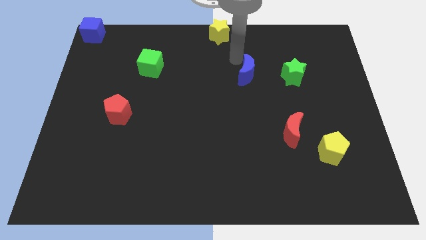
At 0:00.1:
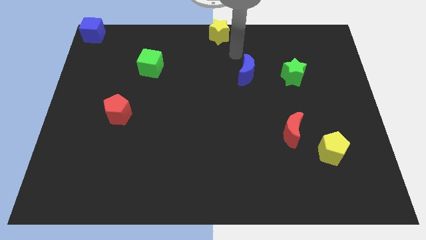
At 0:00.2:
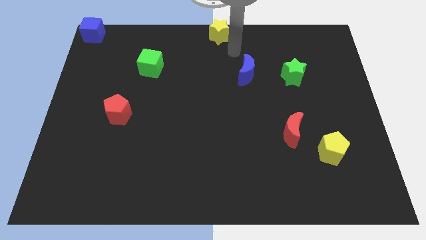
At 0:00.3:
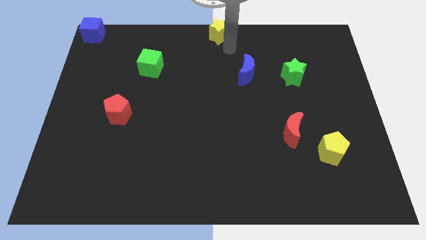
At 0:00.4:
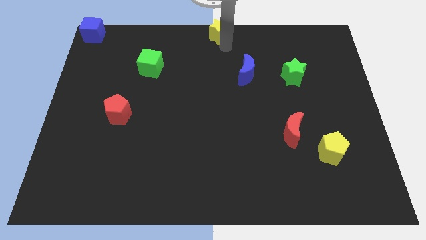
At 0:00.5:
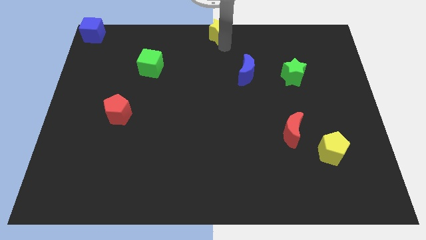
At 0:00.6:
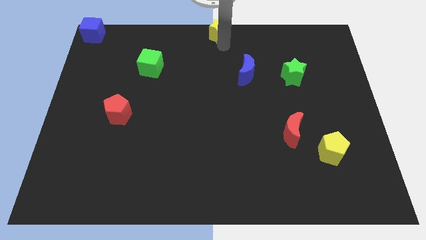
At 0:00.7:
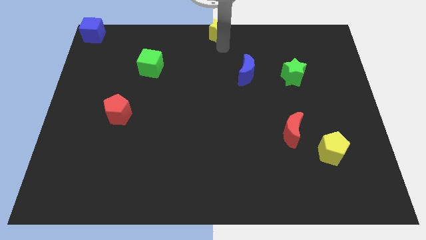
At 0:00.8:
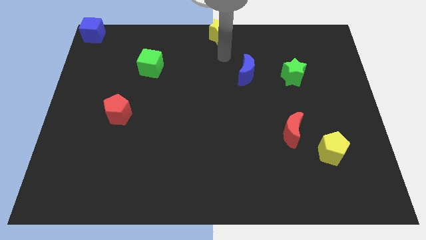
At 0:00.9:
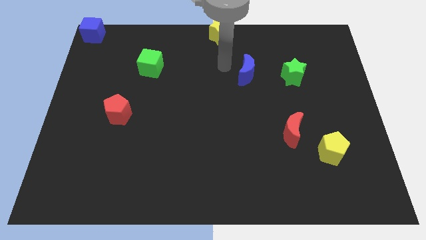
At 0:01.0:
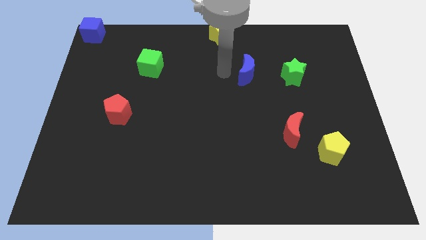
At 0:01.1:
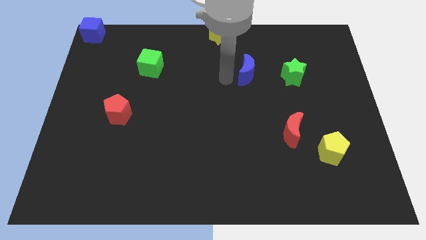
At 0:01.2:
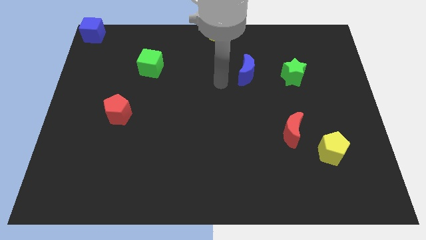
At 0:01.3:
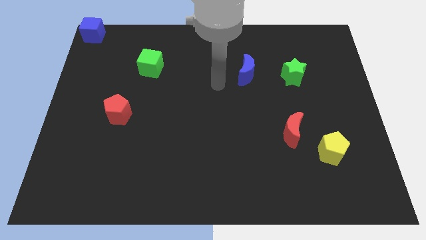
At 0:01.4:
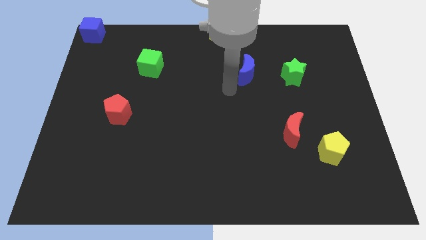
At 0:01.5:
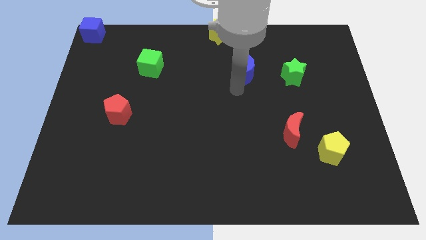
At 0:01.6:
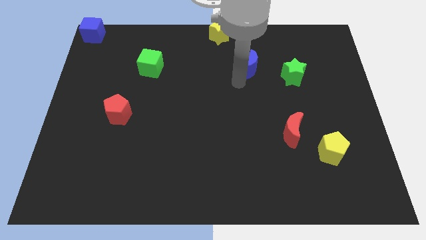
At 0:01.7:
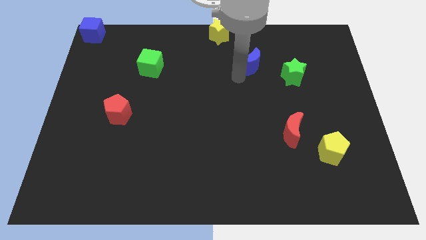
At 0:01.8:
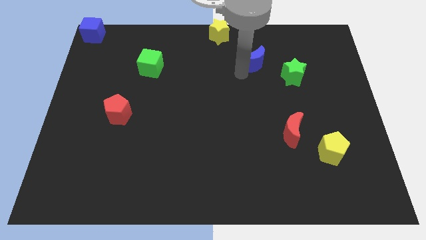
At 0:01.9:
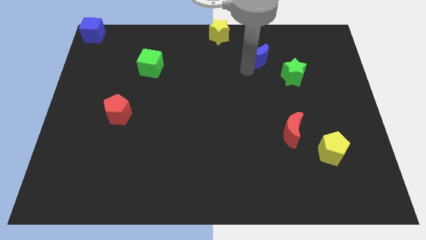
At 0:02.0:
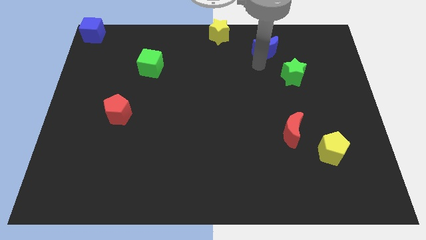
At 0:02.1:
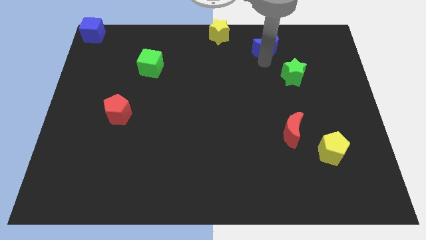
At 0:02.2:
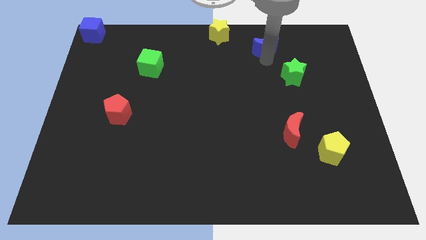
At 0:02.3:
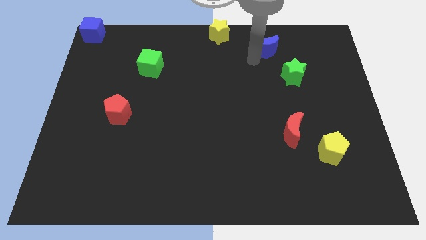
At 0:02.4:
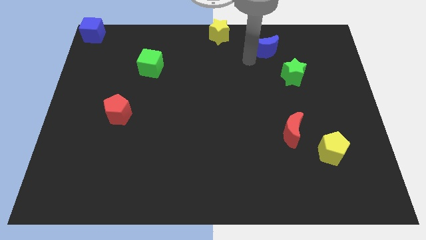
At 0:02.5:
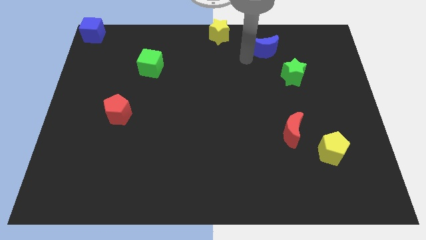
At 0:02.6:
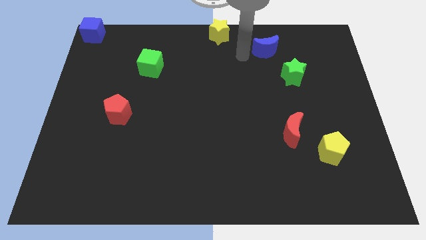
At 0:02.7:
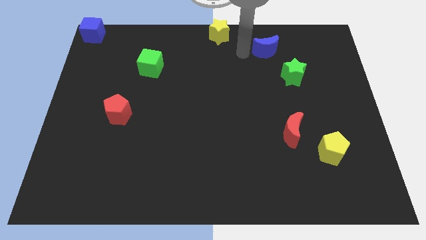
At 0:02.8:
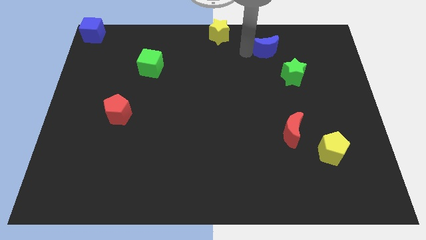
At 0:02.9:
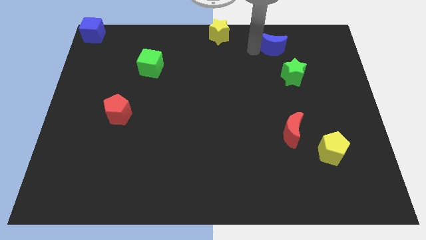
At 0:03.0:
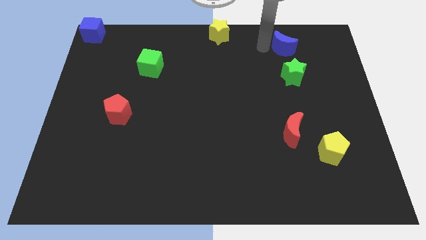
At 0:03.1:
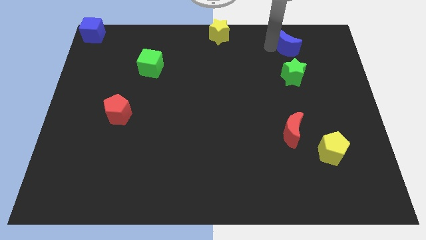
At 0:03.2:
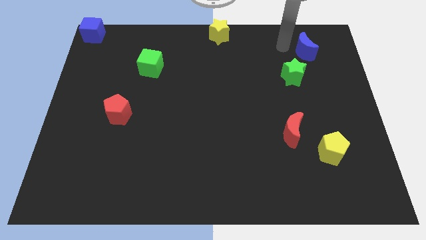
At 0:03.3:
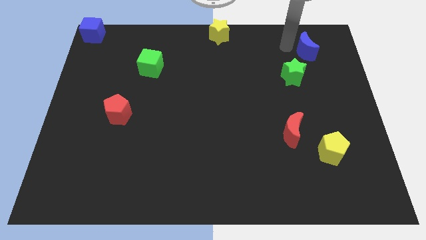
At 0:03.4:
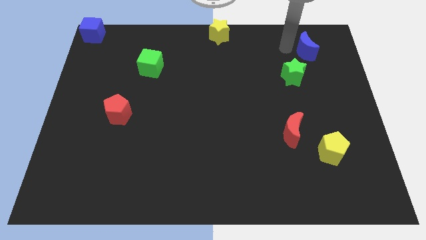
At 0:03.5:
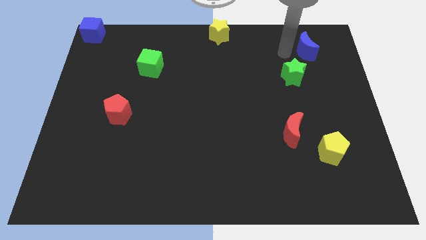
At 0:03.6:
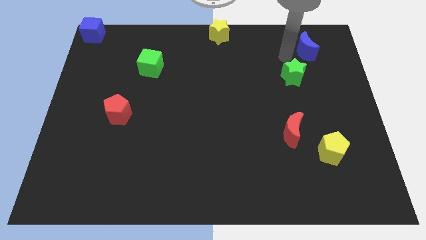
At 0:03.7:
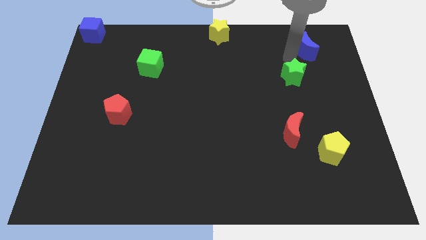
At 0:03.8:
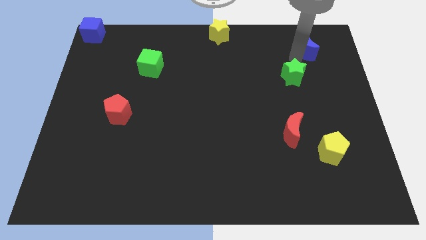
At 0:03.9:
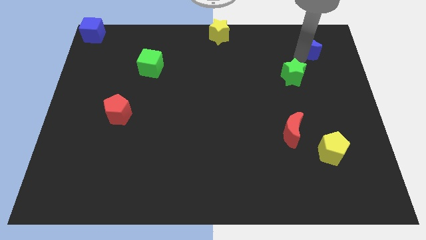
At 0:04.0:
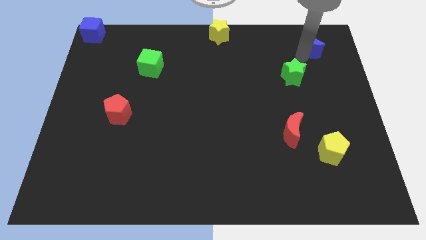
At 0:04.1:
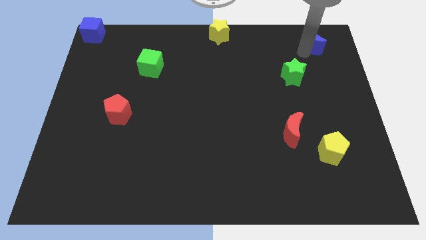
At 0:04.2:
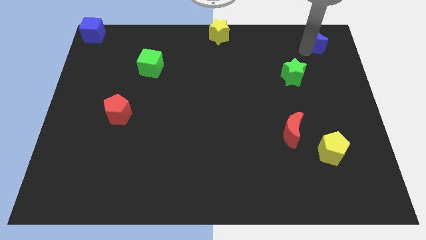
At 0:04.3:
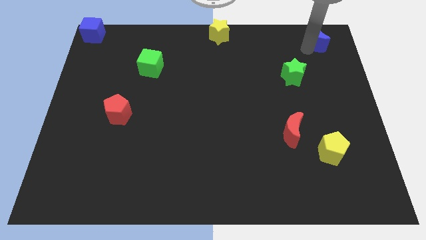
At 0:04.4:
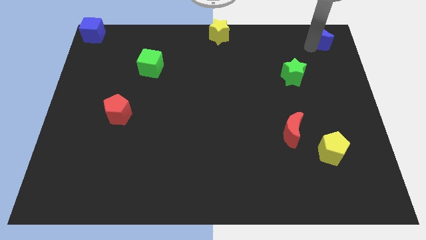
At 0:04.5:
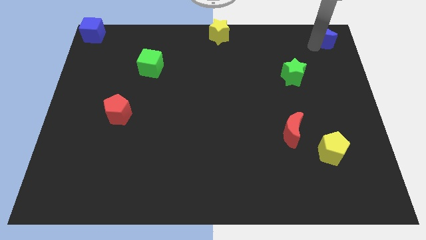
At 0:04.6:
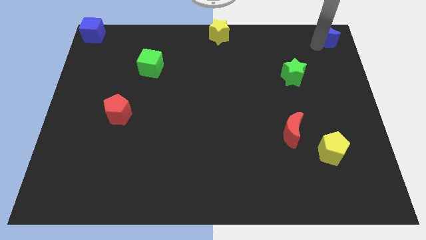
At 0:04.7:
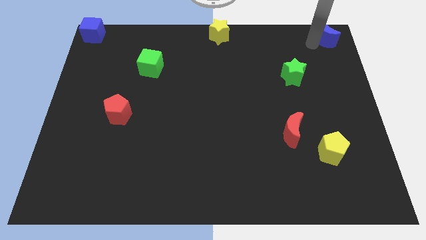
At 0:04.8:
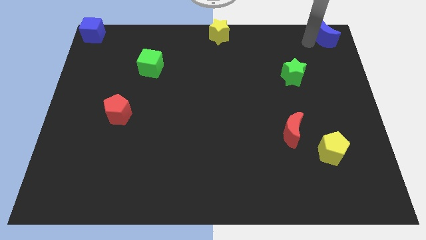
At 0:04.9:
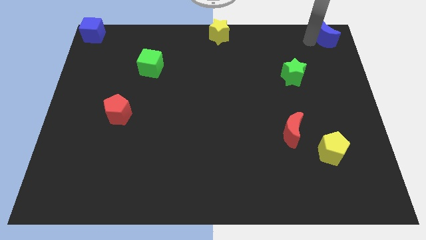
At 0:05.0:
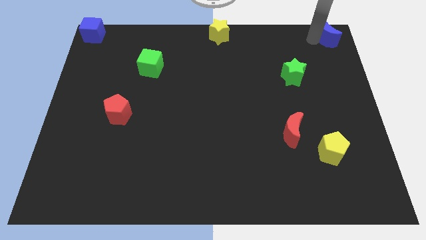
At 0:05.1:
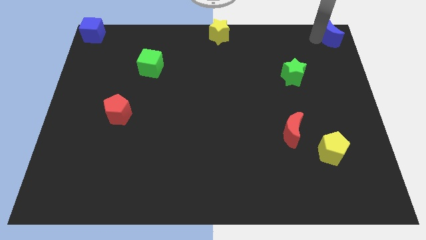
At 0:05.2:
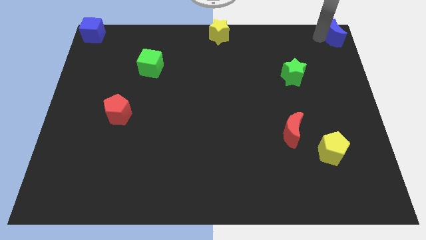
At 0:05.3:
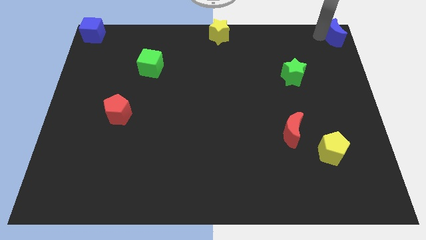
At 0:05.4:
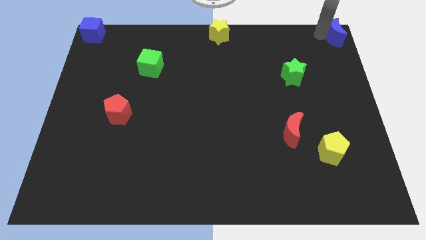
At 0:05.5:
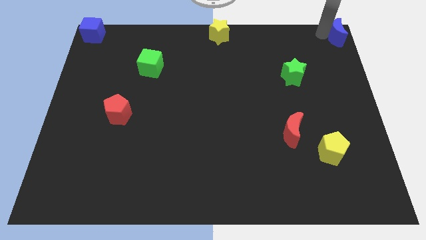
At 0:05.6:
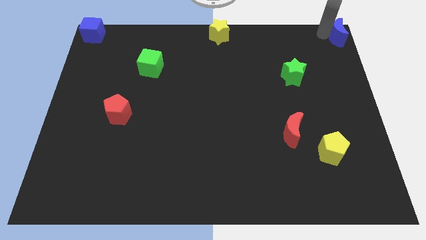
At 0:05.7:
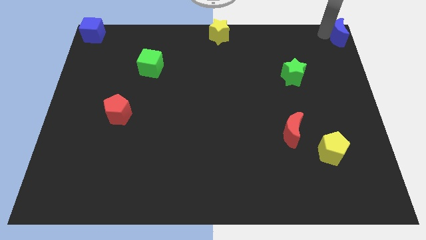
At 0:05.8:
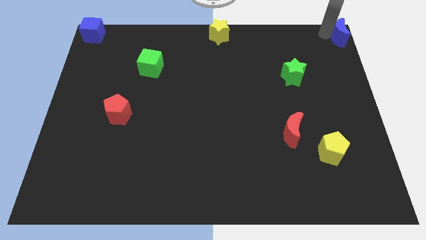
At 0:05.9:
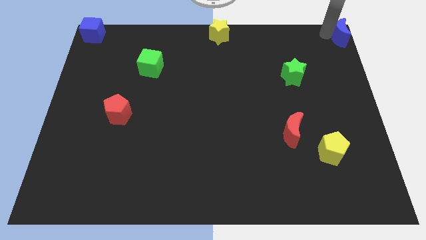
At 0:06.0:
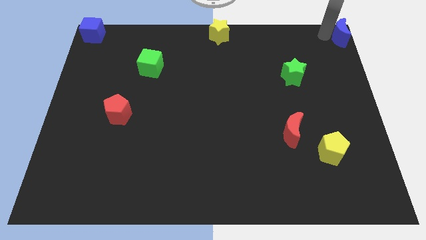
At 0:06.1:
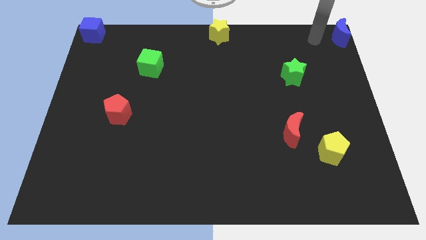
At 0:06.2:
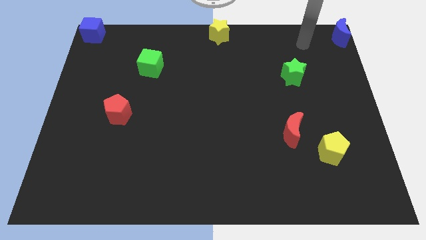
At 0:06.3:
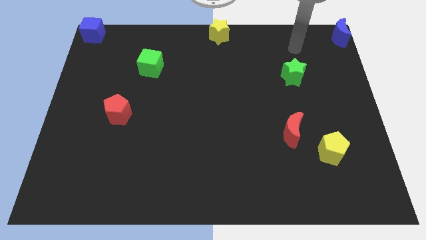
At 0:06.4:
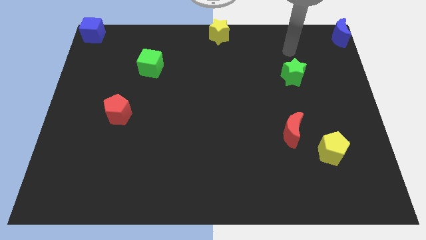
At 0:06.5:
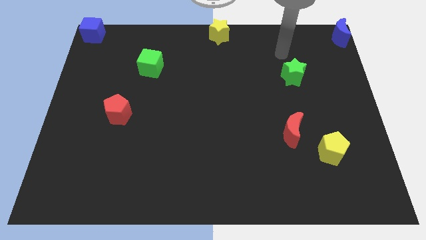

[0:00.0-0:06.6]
place the blue moon right to the yellow star

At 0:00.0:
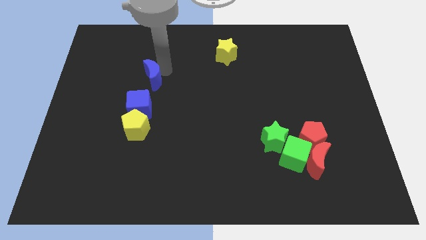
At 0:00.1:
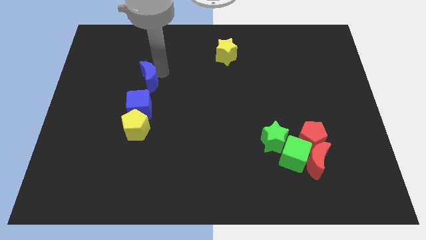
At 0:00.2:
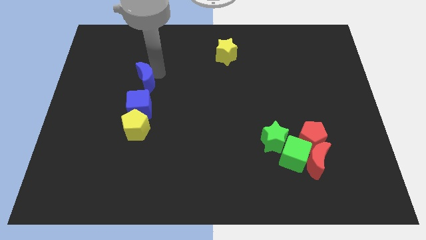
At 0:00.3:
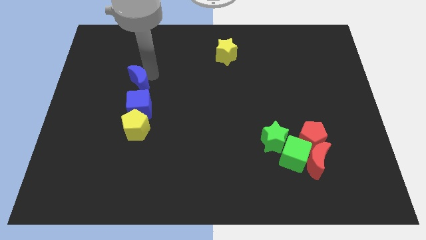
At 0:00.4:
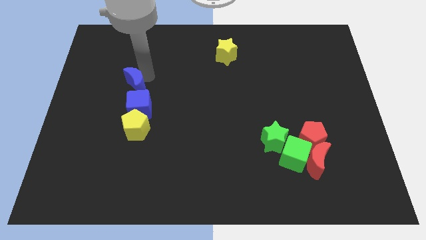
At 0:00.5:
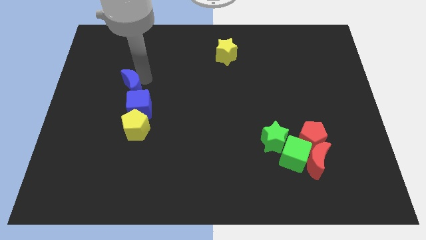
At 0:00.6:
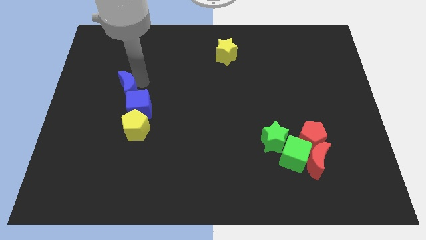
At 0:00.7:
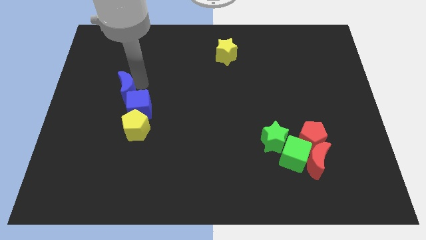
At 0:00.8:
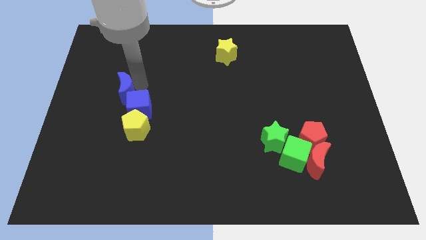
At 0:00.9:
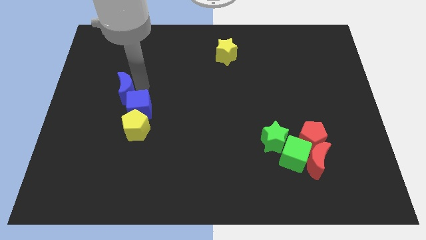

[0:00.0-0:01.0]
place the blue moon above the blue cube

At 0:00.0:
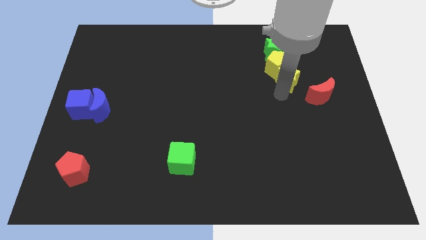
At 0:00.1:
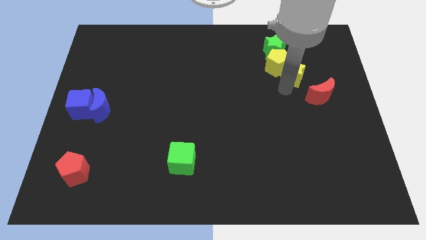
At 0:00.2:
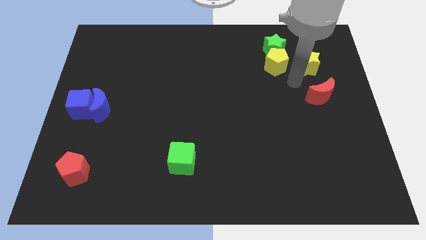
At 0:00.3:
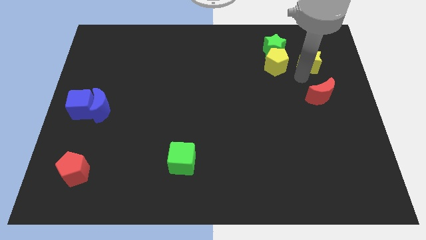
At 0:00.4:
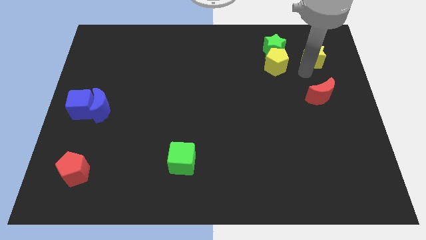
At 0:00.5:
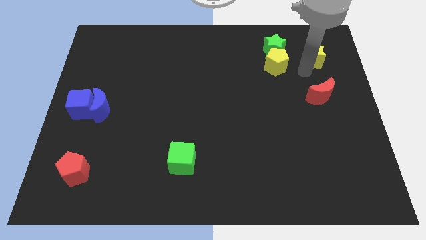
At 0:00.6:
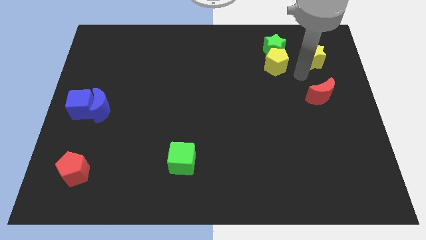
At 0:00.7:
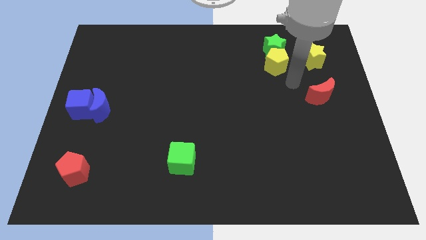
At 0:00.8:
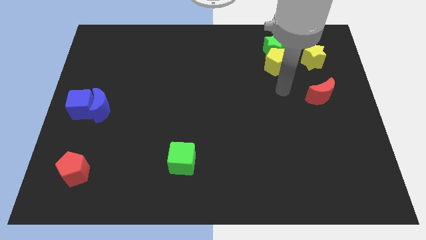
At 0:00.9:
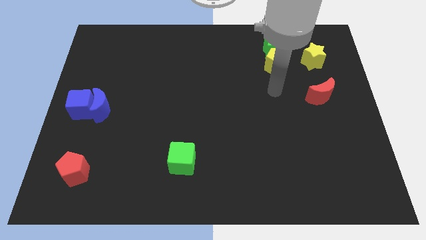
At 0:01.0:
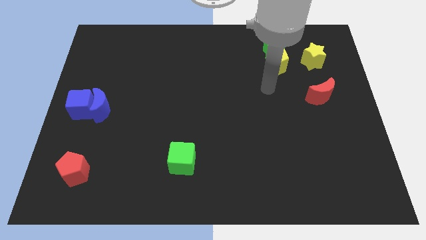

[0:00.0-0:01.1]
separate the yellow star and yellow pentagon
